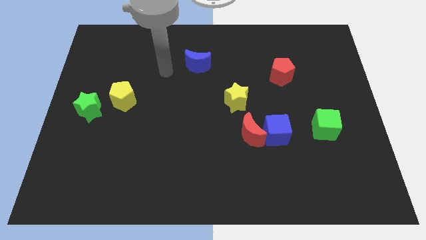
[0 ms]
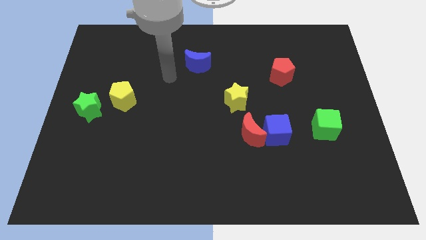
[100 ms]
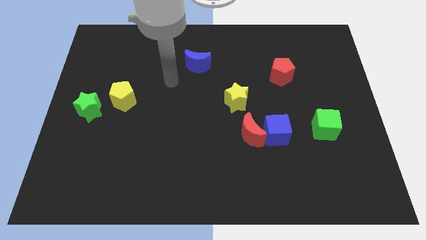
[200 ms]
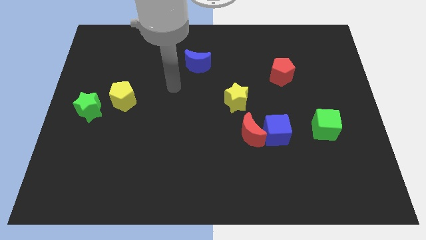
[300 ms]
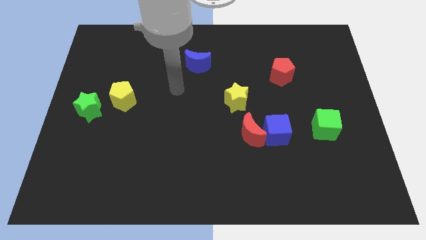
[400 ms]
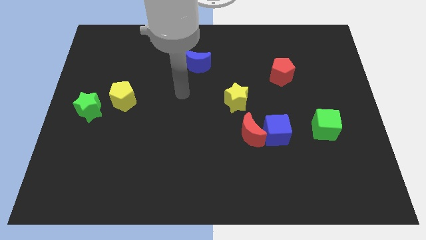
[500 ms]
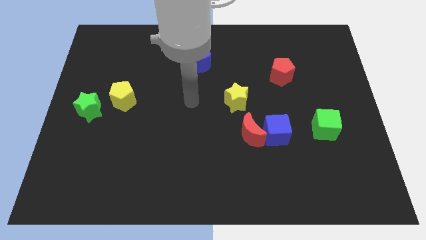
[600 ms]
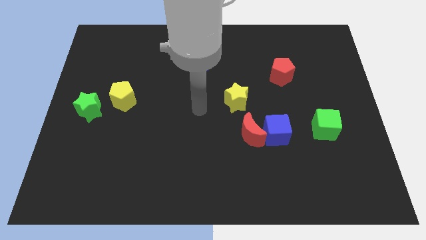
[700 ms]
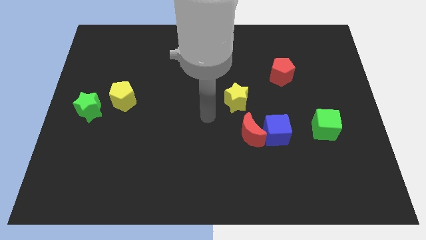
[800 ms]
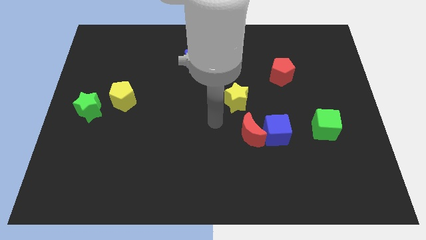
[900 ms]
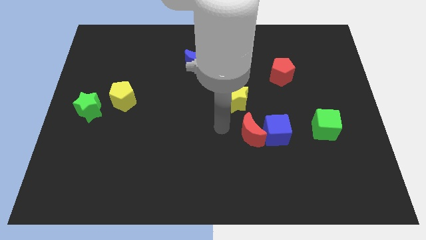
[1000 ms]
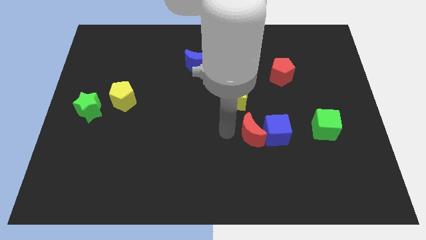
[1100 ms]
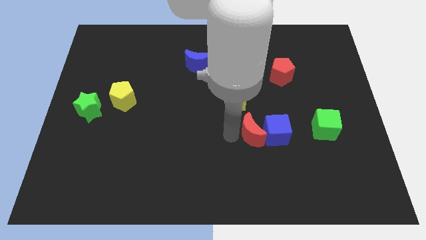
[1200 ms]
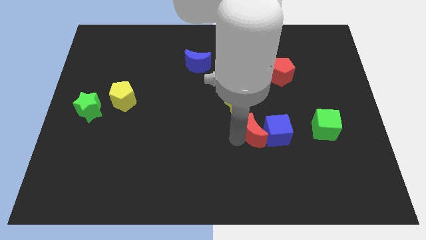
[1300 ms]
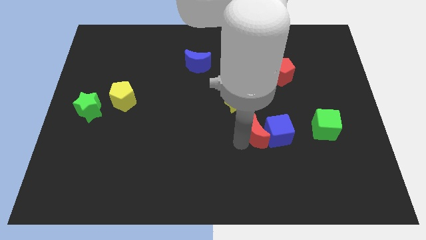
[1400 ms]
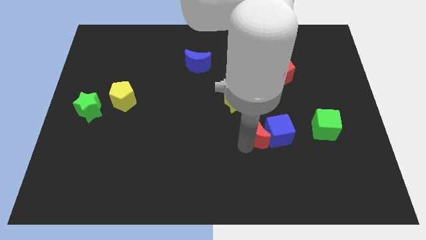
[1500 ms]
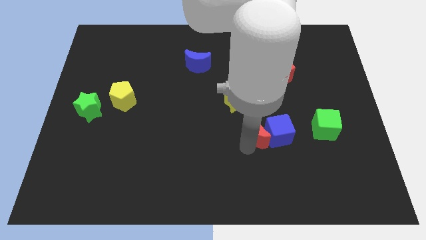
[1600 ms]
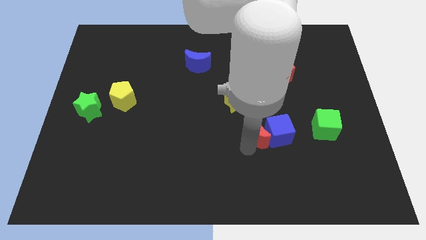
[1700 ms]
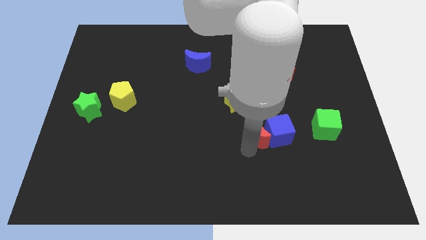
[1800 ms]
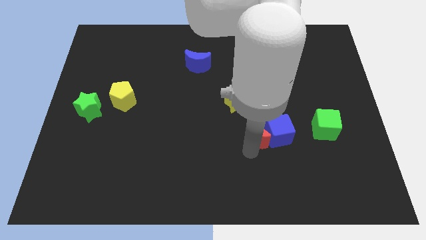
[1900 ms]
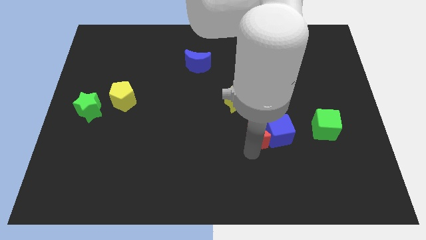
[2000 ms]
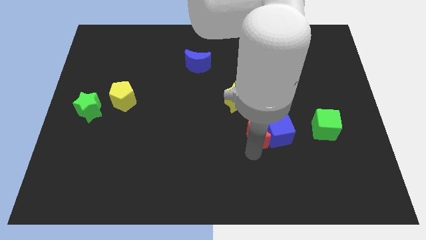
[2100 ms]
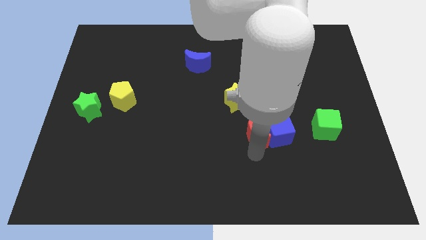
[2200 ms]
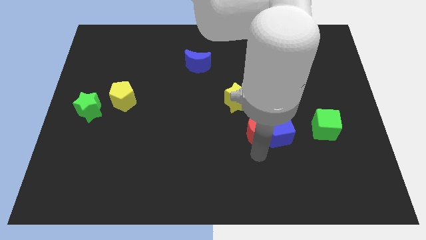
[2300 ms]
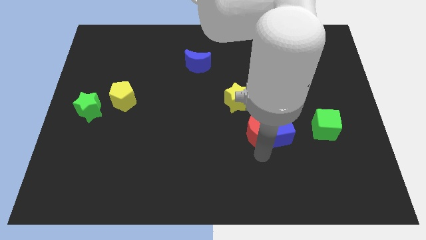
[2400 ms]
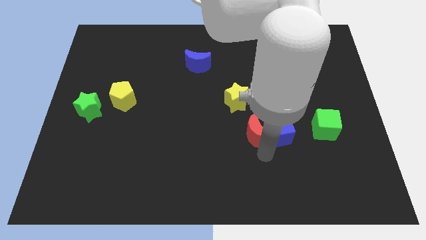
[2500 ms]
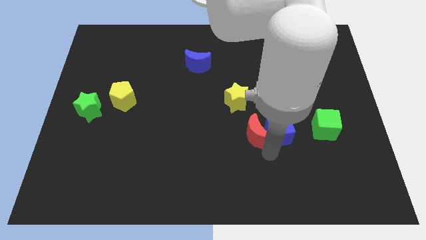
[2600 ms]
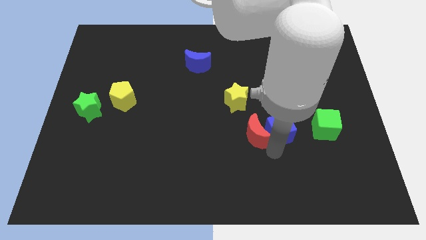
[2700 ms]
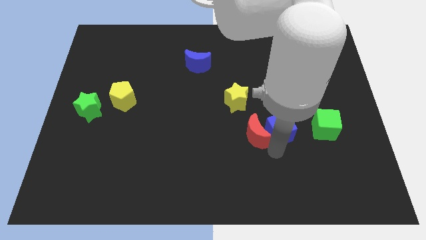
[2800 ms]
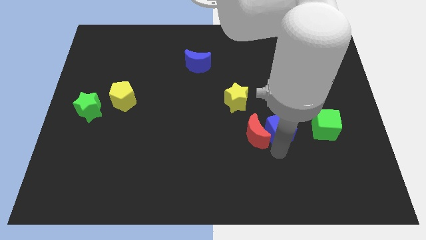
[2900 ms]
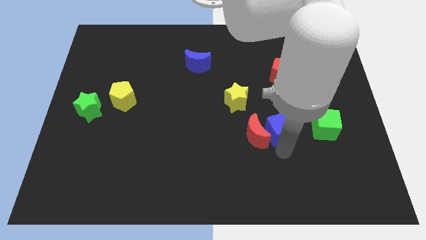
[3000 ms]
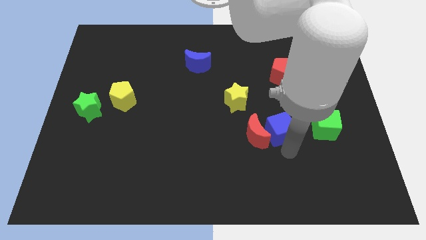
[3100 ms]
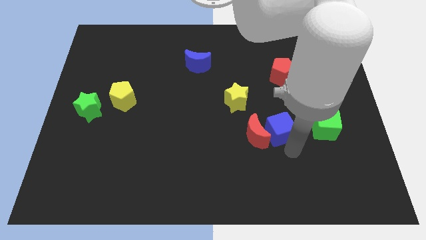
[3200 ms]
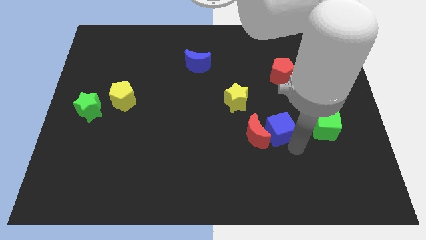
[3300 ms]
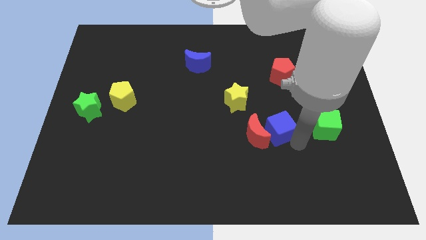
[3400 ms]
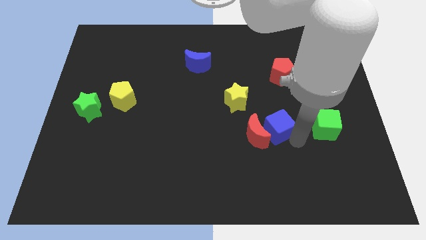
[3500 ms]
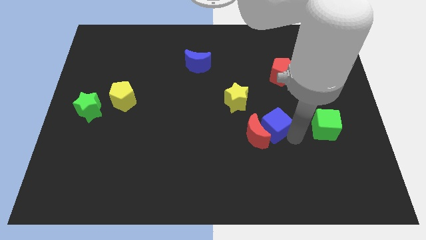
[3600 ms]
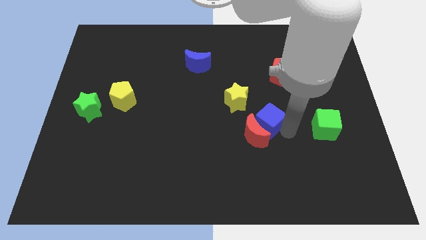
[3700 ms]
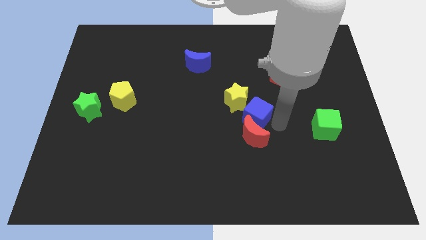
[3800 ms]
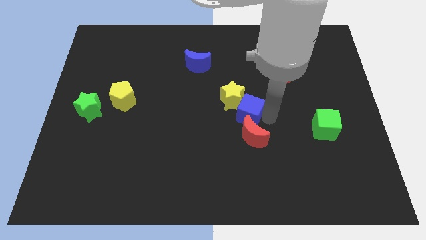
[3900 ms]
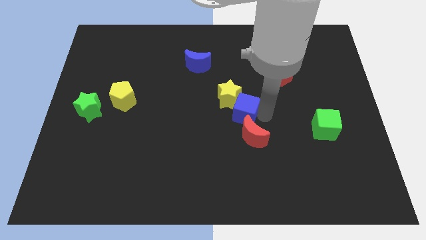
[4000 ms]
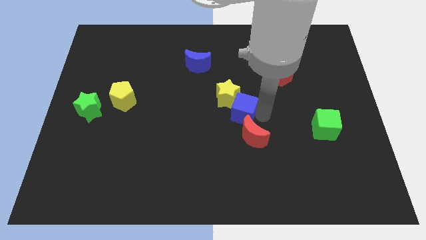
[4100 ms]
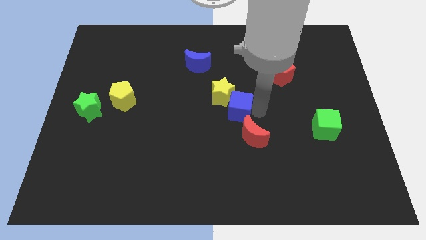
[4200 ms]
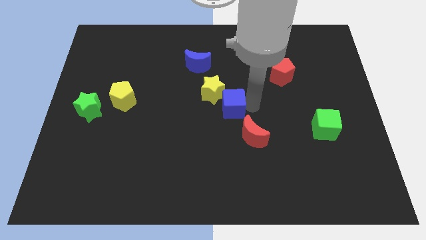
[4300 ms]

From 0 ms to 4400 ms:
separate the blue cube from the red crescent

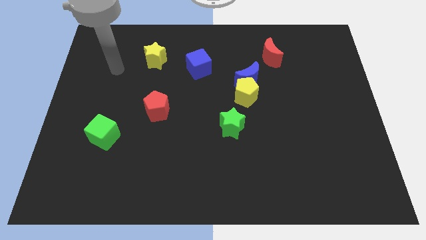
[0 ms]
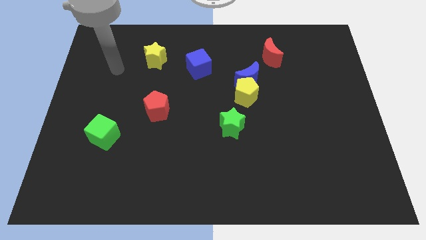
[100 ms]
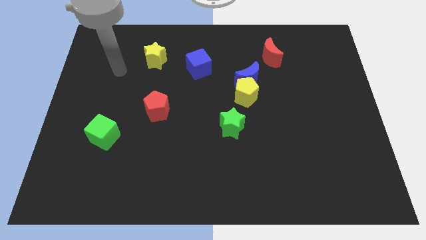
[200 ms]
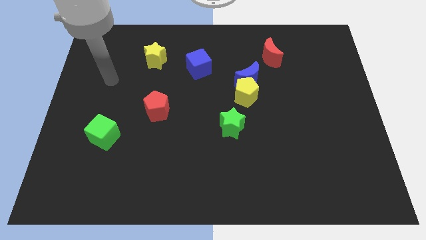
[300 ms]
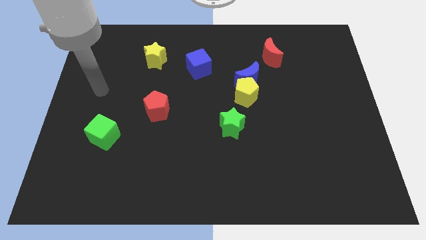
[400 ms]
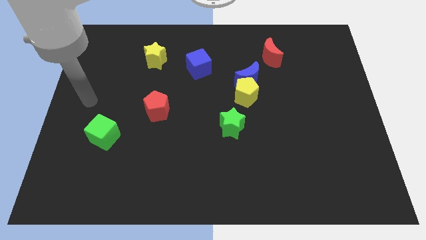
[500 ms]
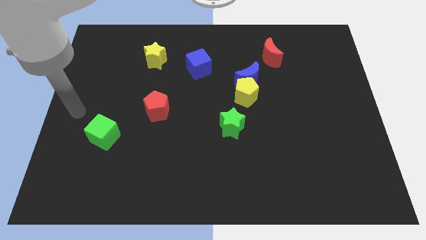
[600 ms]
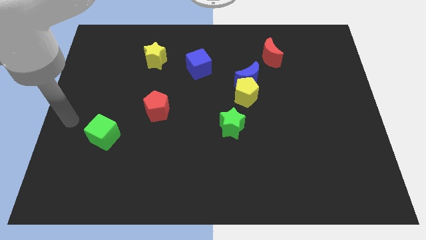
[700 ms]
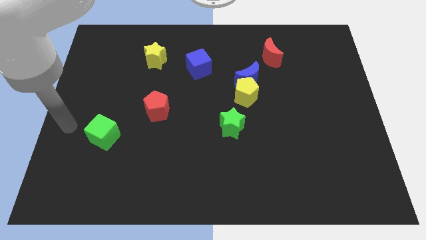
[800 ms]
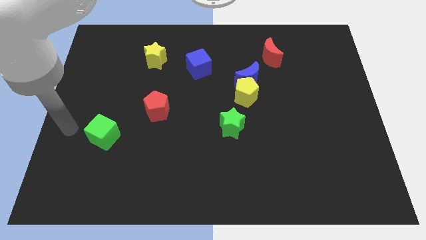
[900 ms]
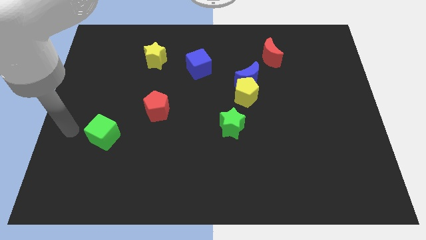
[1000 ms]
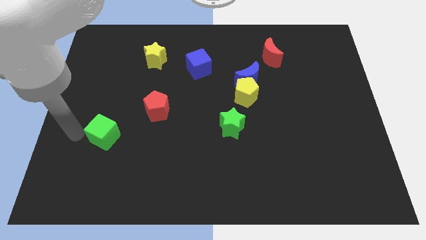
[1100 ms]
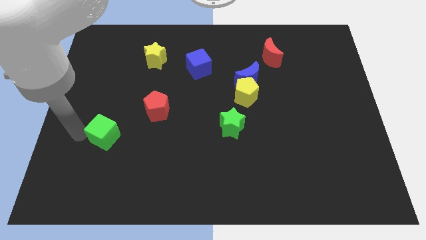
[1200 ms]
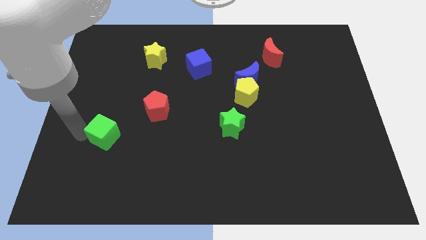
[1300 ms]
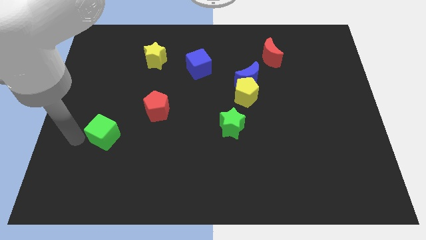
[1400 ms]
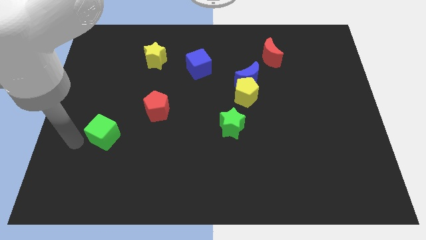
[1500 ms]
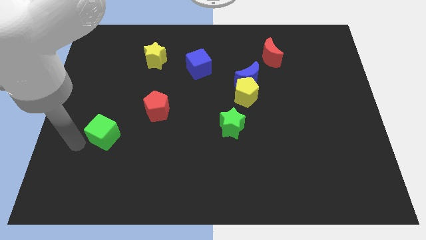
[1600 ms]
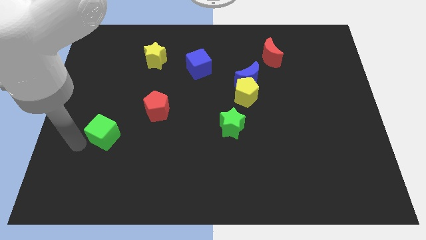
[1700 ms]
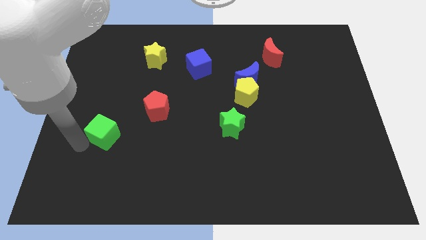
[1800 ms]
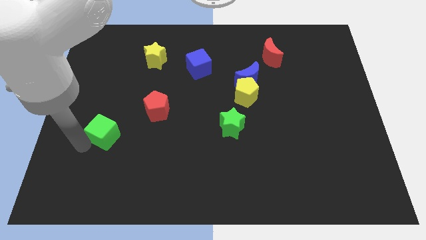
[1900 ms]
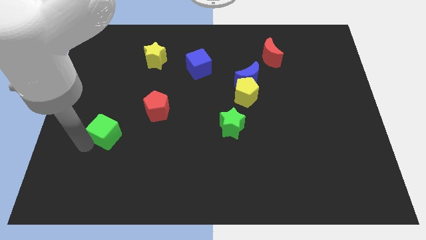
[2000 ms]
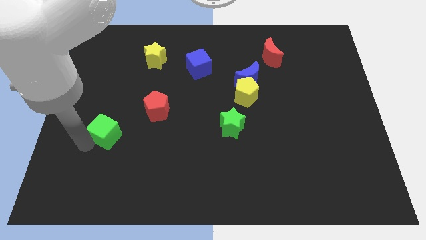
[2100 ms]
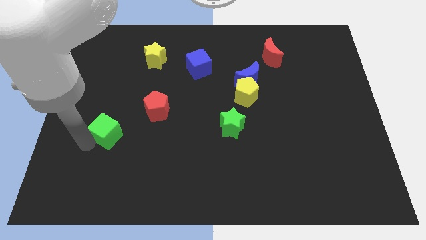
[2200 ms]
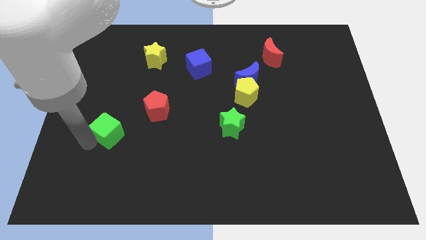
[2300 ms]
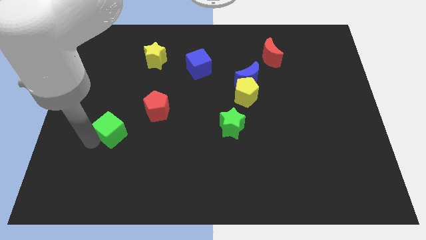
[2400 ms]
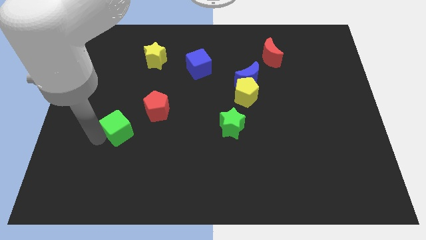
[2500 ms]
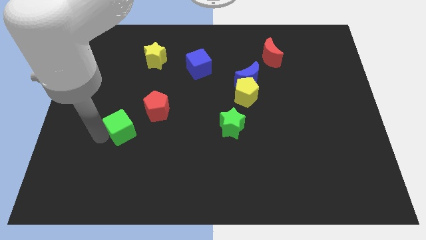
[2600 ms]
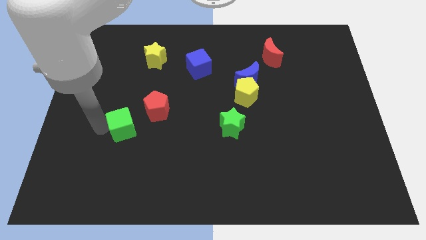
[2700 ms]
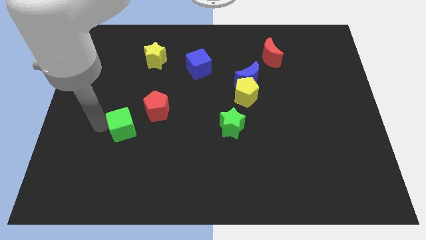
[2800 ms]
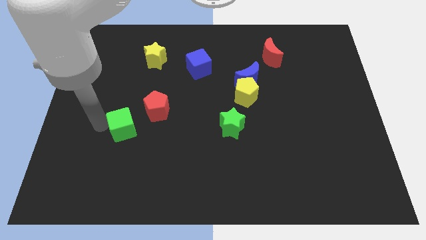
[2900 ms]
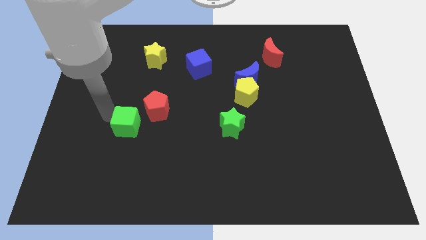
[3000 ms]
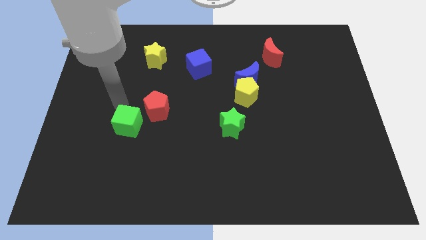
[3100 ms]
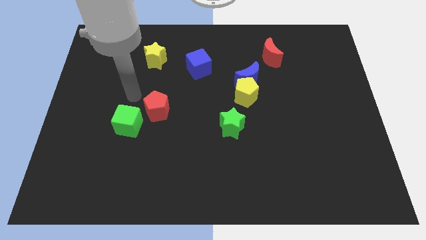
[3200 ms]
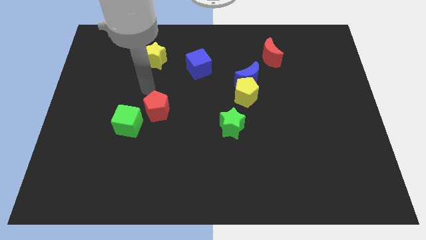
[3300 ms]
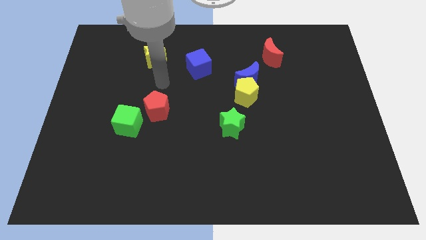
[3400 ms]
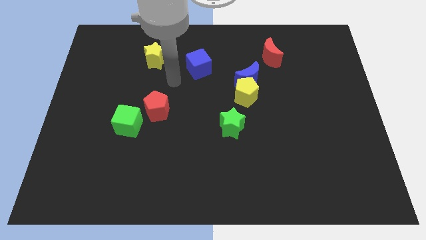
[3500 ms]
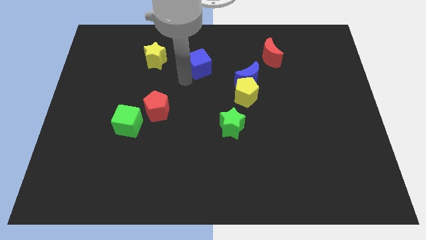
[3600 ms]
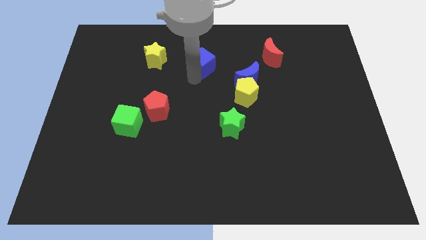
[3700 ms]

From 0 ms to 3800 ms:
push the green cube slightly upwards

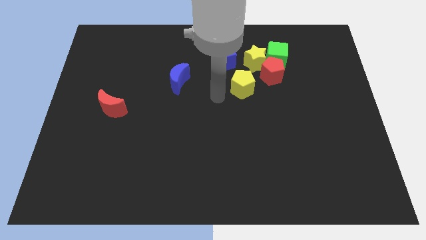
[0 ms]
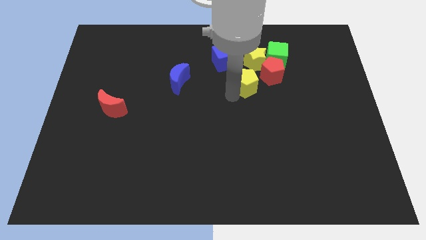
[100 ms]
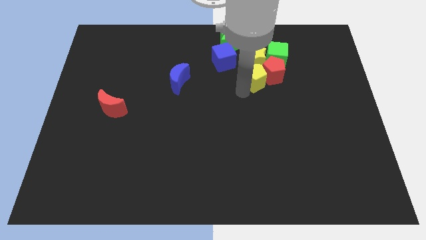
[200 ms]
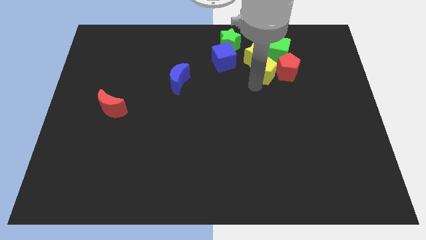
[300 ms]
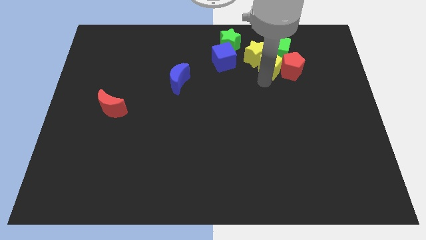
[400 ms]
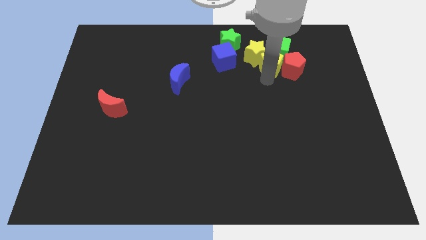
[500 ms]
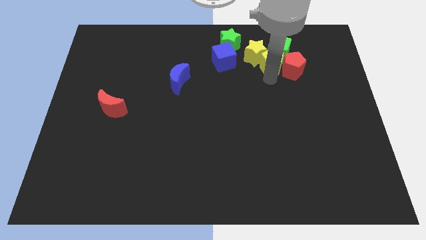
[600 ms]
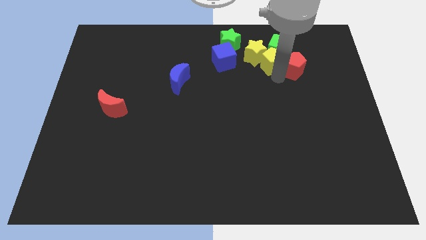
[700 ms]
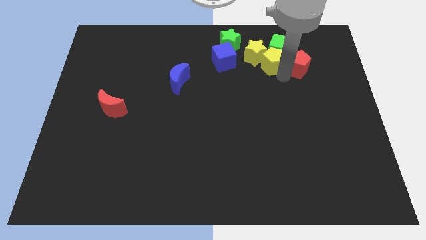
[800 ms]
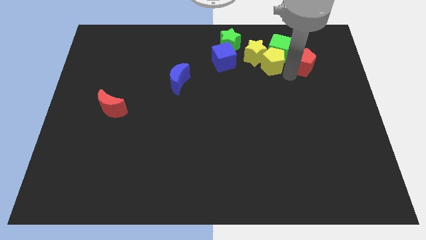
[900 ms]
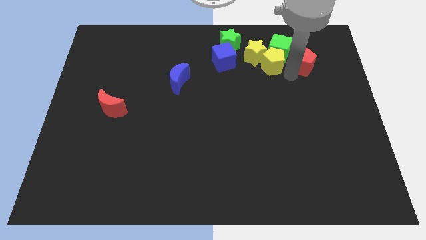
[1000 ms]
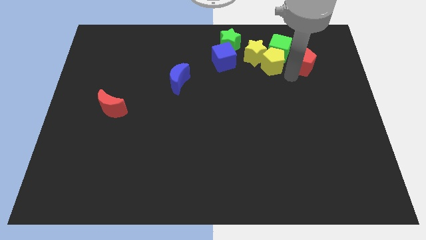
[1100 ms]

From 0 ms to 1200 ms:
move yellow pentagon red pentagon to the right side
